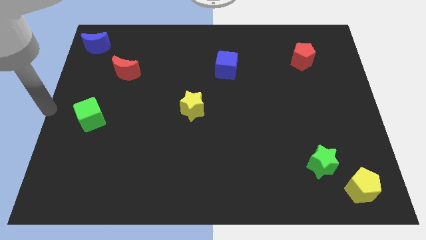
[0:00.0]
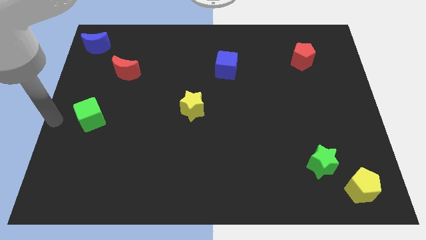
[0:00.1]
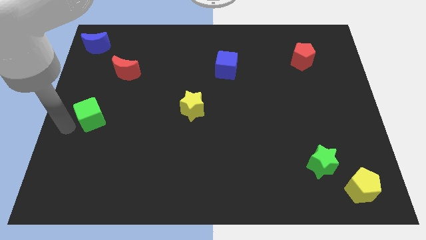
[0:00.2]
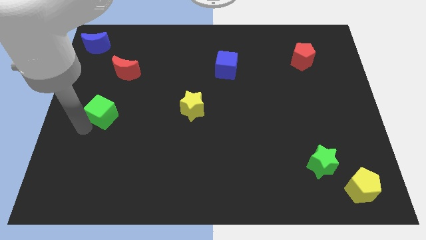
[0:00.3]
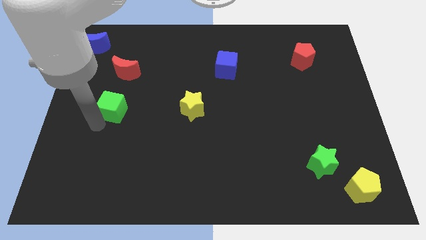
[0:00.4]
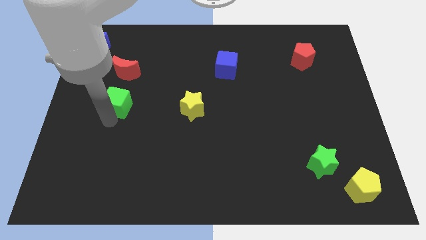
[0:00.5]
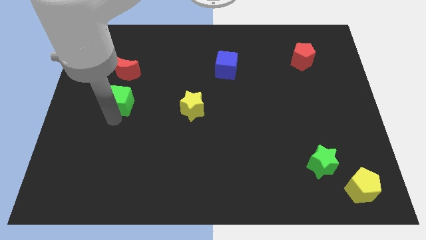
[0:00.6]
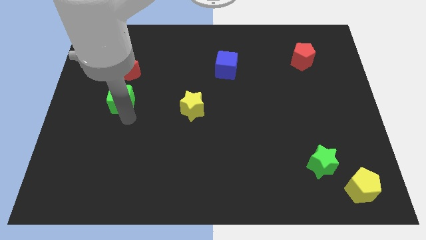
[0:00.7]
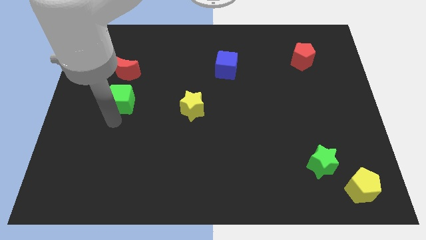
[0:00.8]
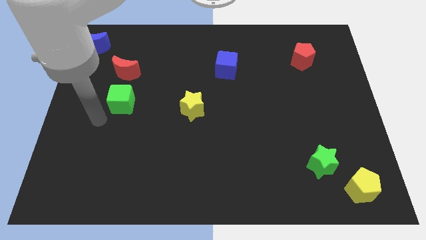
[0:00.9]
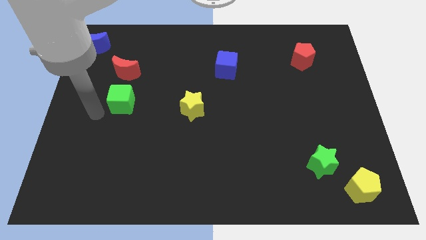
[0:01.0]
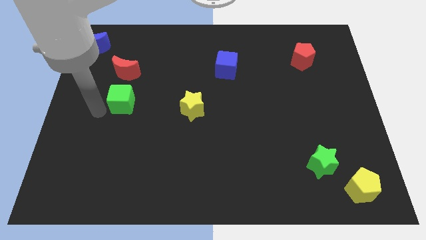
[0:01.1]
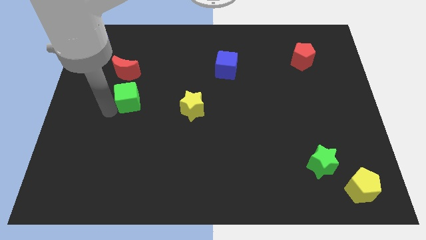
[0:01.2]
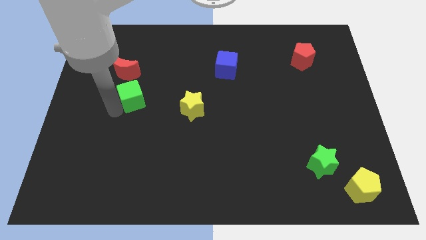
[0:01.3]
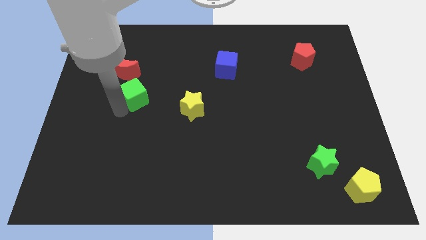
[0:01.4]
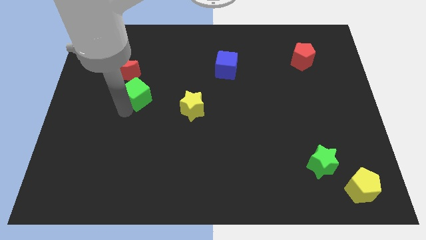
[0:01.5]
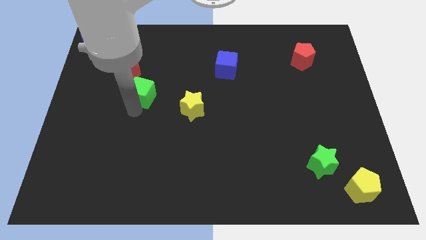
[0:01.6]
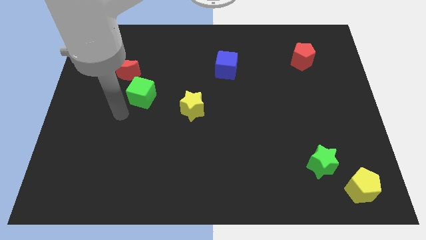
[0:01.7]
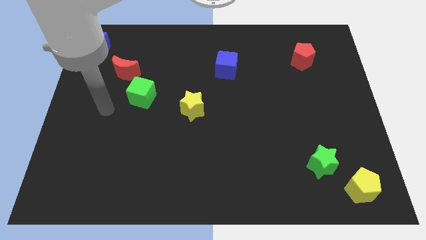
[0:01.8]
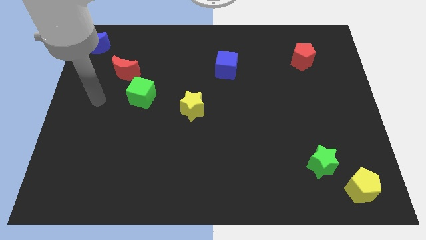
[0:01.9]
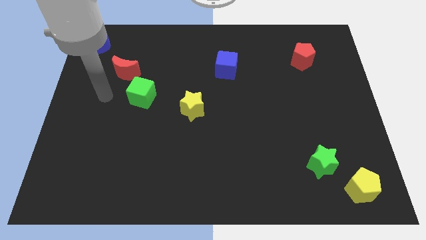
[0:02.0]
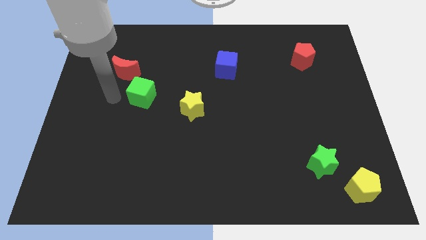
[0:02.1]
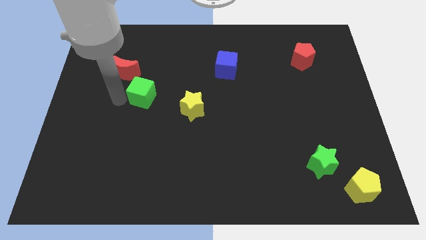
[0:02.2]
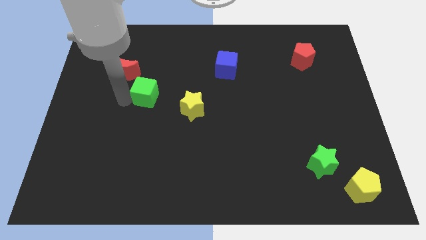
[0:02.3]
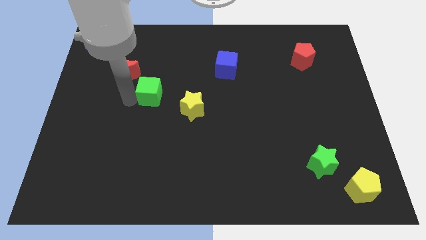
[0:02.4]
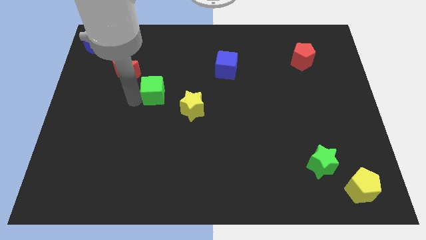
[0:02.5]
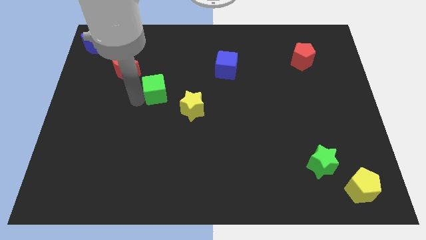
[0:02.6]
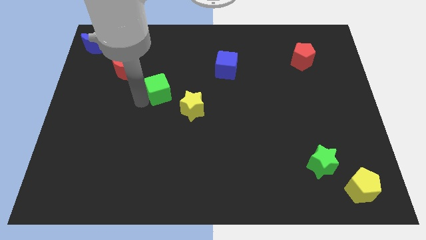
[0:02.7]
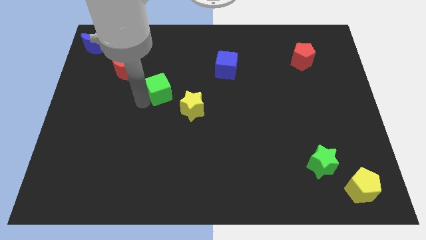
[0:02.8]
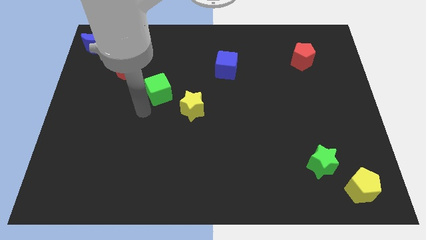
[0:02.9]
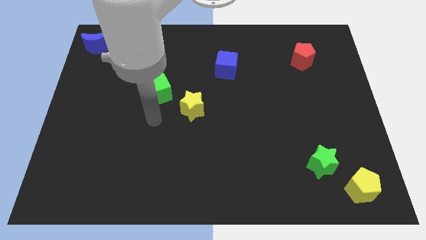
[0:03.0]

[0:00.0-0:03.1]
place green cube in between yellow star and red moon

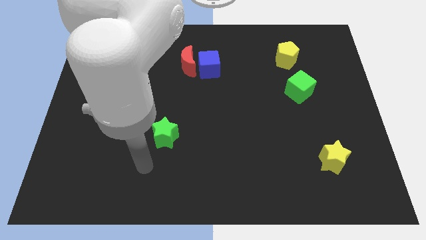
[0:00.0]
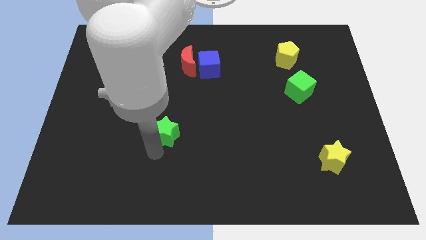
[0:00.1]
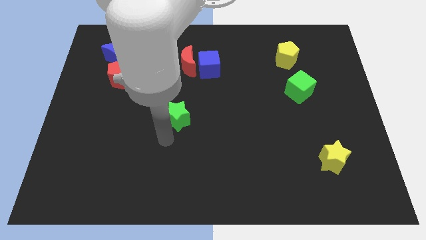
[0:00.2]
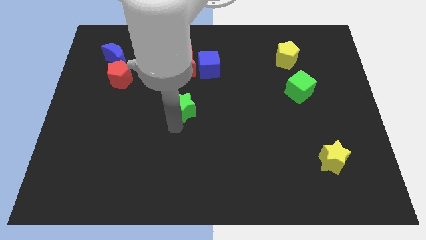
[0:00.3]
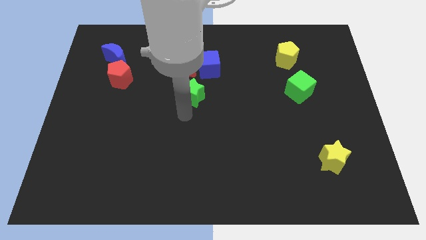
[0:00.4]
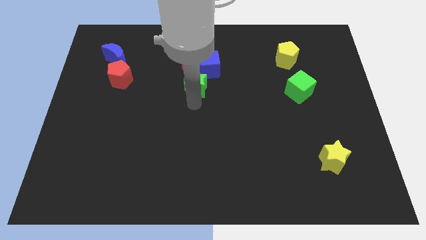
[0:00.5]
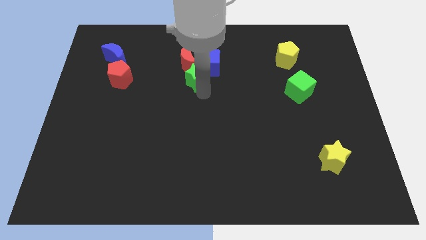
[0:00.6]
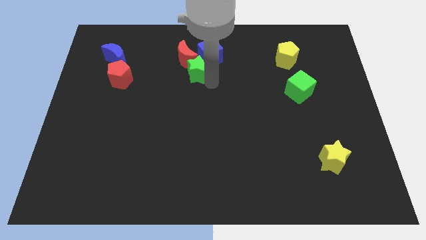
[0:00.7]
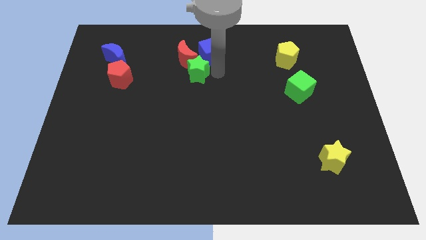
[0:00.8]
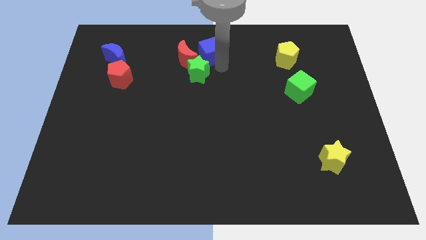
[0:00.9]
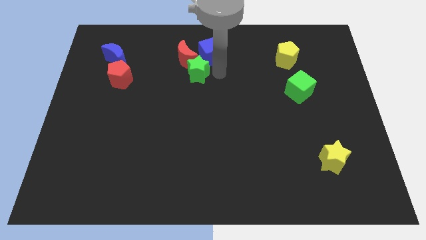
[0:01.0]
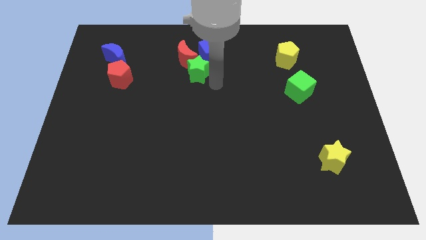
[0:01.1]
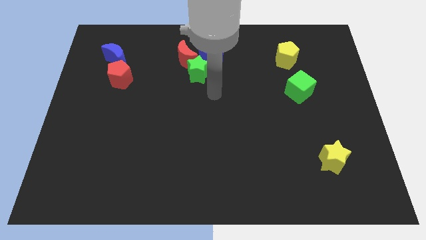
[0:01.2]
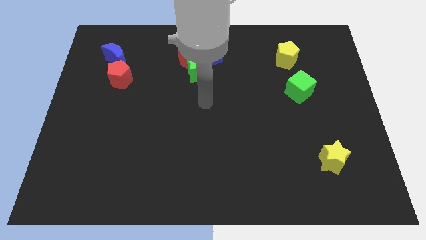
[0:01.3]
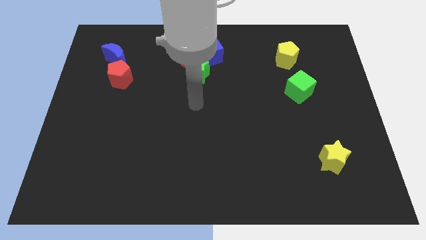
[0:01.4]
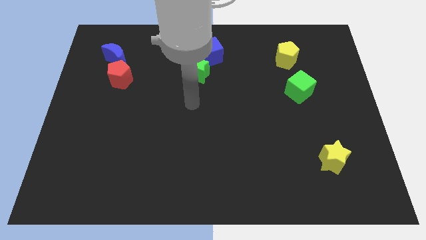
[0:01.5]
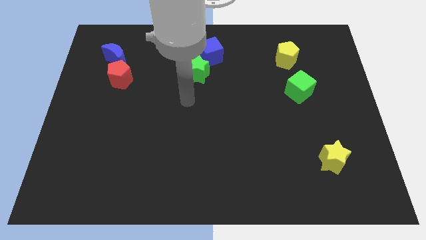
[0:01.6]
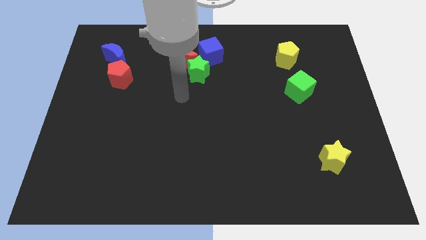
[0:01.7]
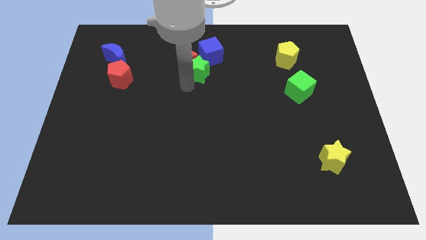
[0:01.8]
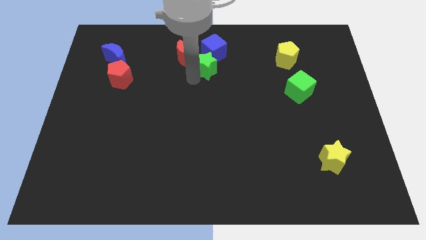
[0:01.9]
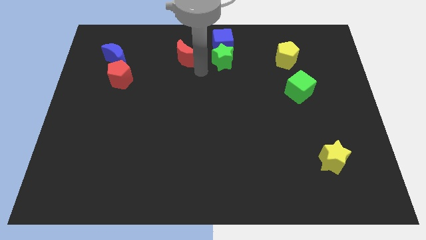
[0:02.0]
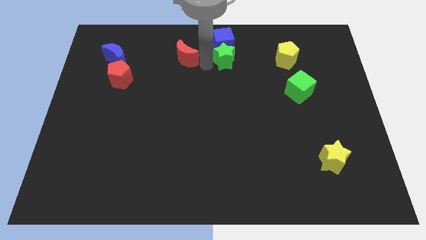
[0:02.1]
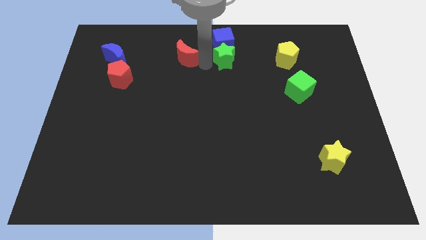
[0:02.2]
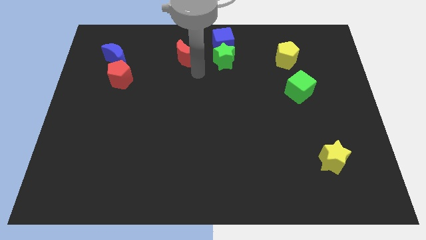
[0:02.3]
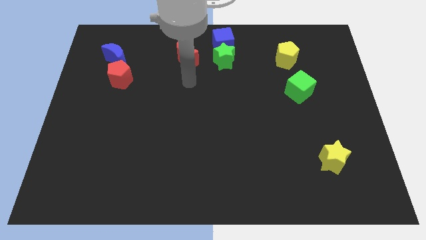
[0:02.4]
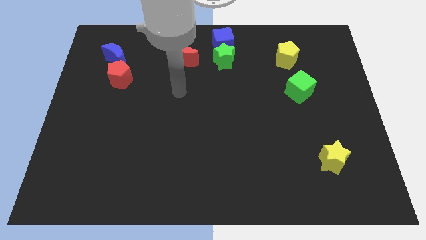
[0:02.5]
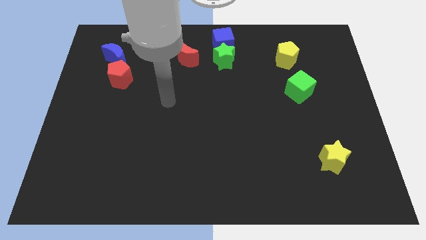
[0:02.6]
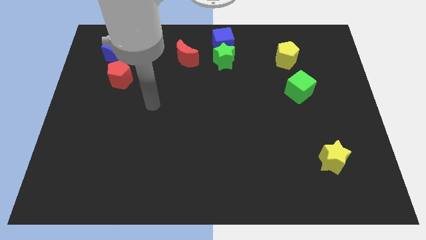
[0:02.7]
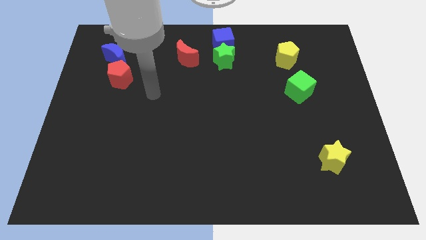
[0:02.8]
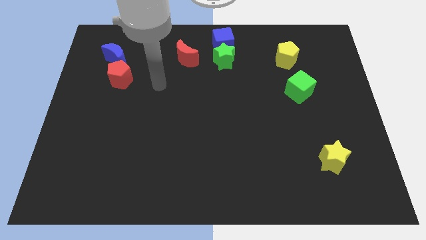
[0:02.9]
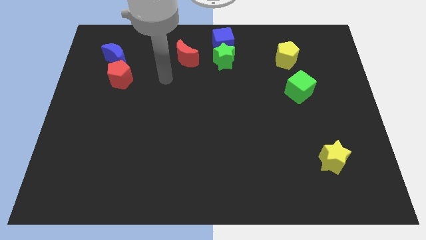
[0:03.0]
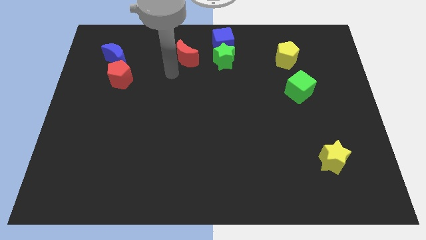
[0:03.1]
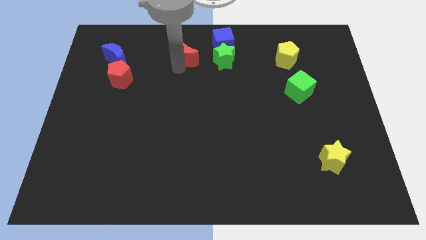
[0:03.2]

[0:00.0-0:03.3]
place green star to the bottom of blue cube

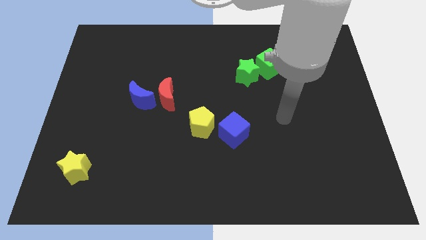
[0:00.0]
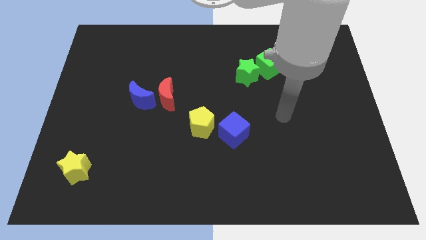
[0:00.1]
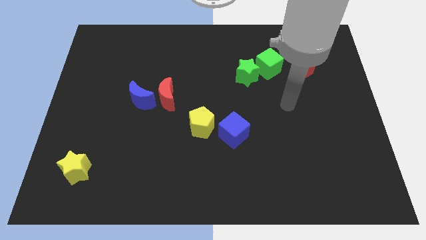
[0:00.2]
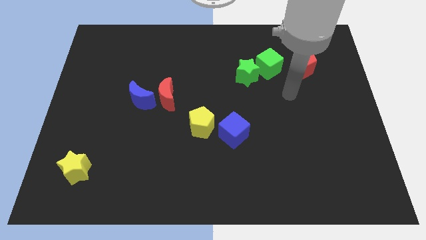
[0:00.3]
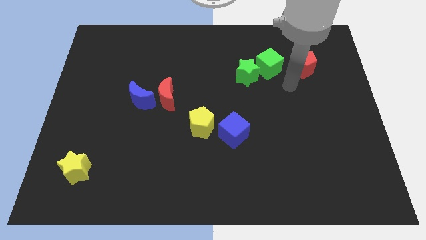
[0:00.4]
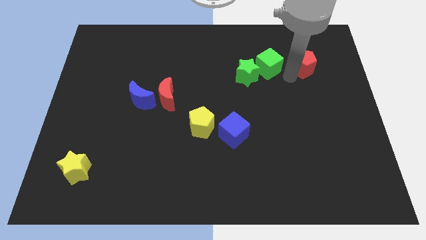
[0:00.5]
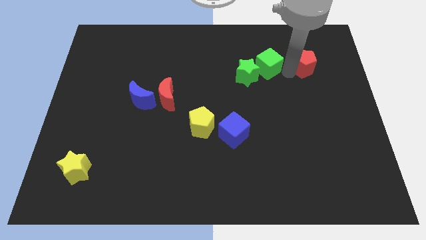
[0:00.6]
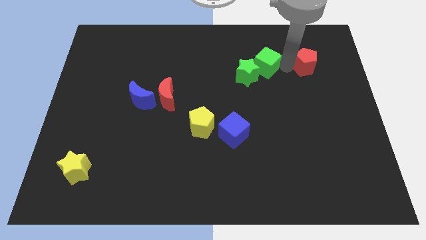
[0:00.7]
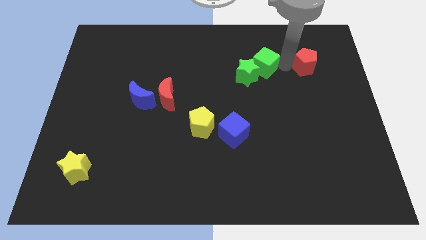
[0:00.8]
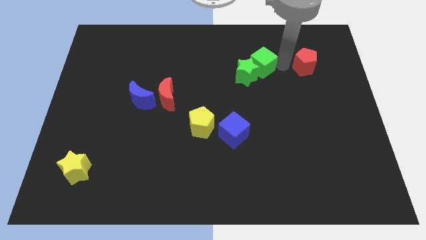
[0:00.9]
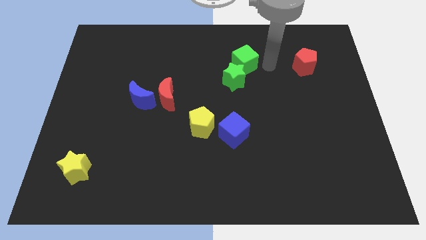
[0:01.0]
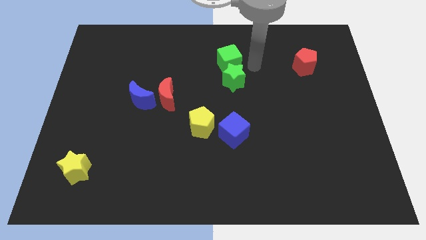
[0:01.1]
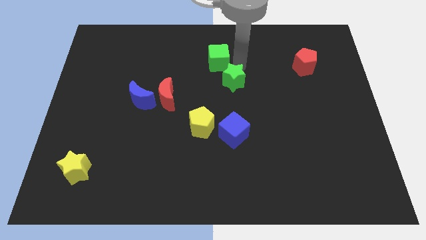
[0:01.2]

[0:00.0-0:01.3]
push the green cube to the top side of the green star

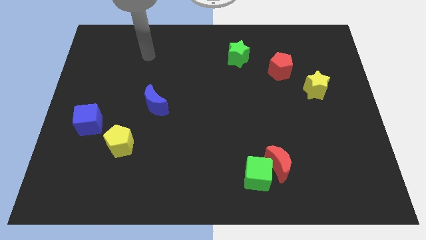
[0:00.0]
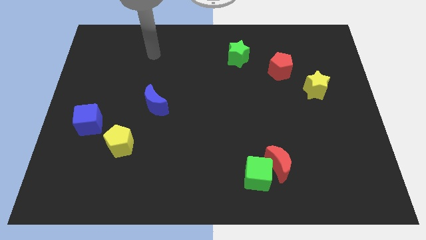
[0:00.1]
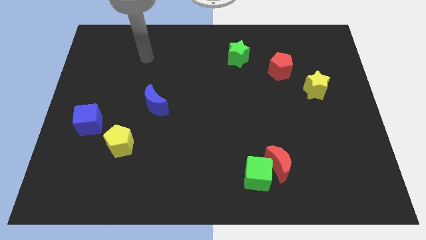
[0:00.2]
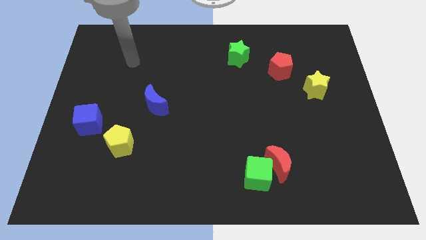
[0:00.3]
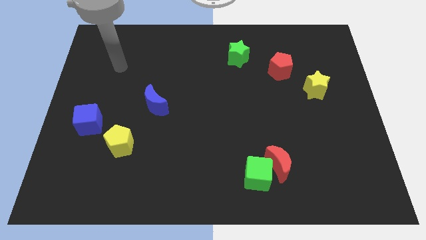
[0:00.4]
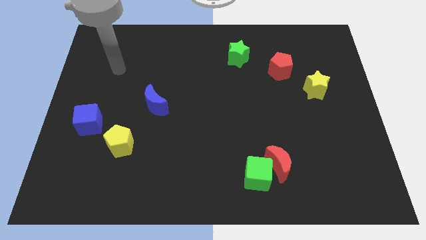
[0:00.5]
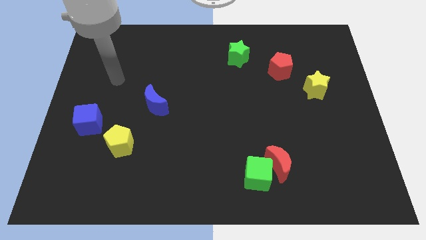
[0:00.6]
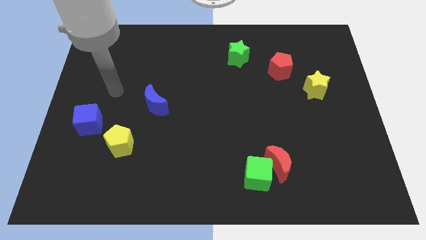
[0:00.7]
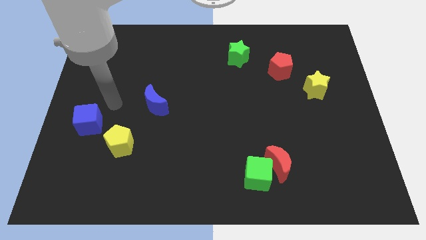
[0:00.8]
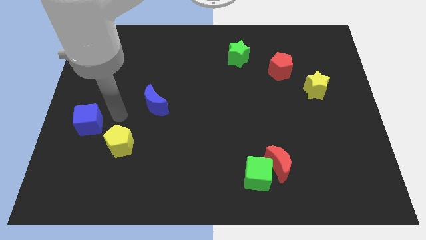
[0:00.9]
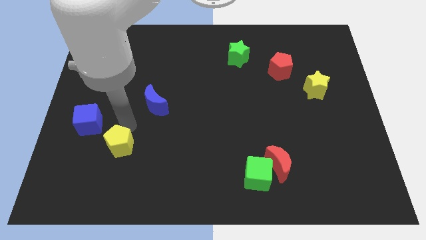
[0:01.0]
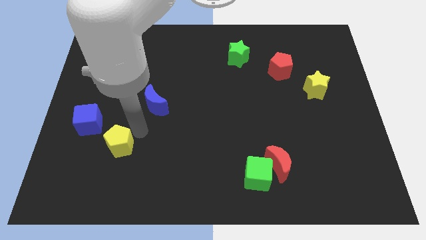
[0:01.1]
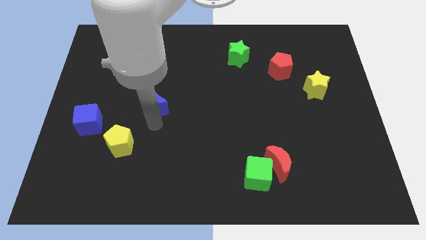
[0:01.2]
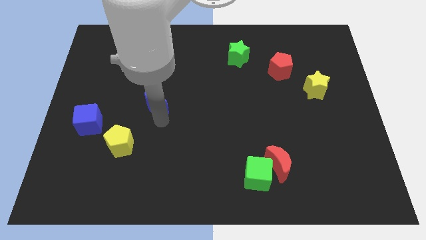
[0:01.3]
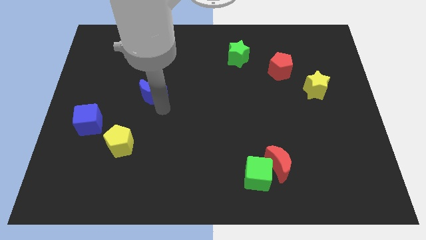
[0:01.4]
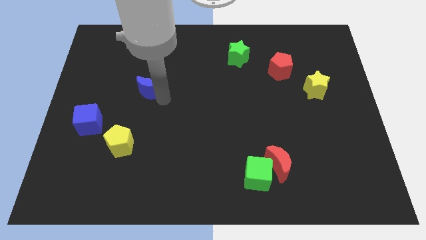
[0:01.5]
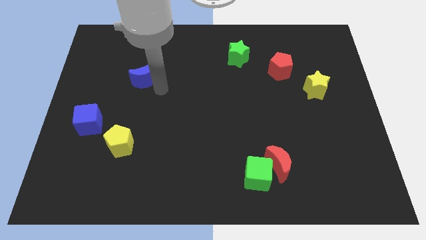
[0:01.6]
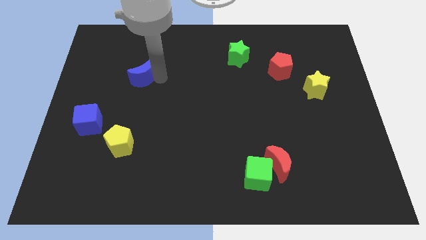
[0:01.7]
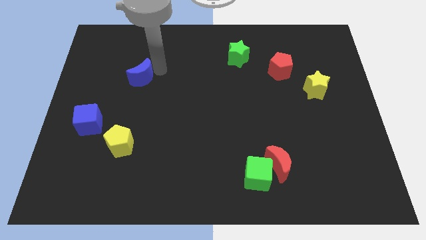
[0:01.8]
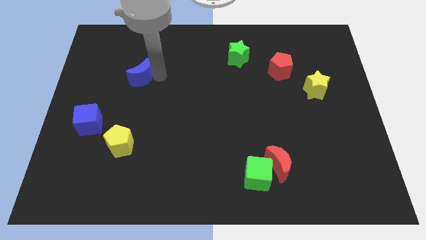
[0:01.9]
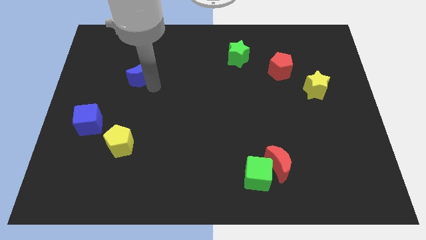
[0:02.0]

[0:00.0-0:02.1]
move the blue crescent towards the top side
